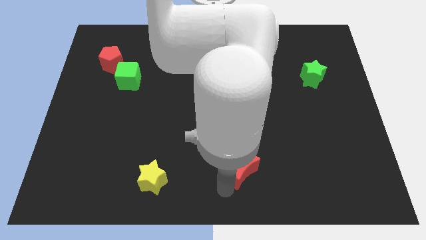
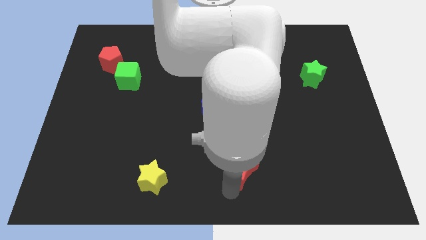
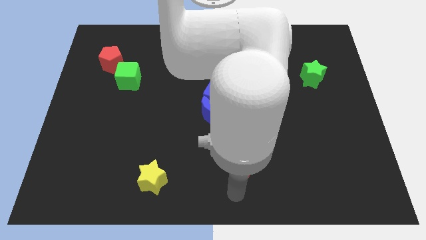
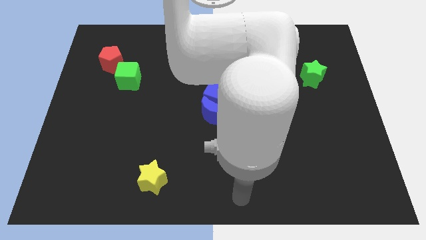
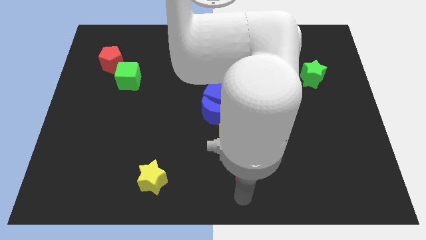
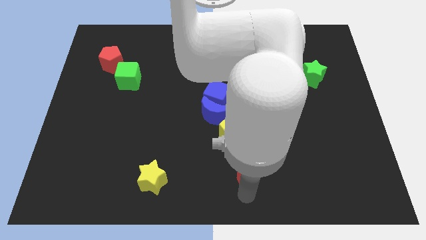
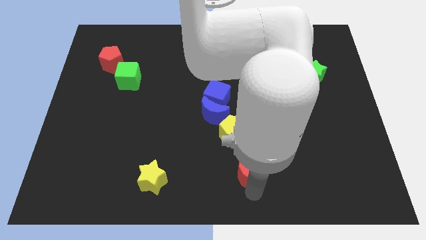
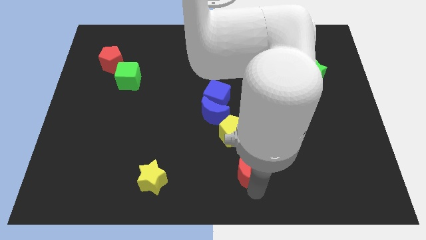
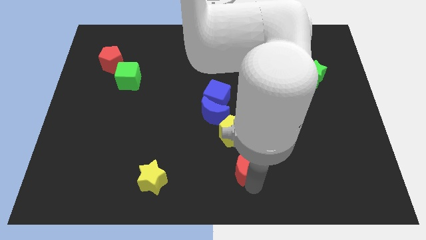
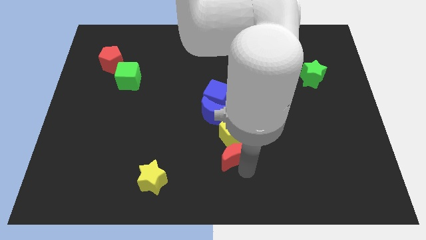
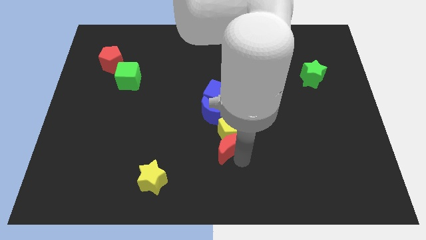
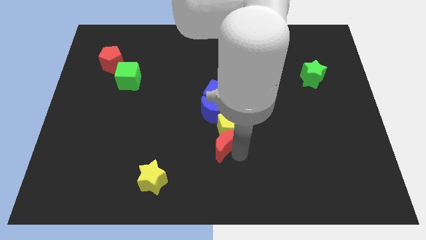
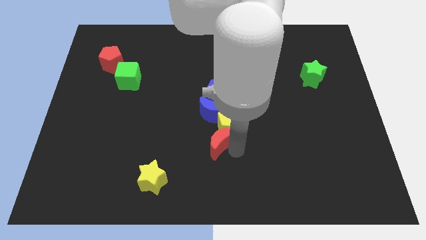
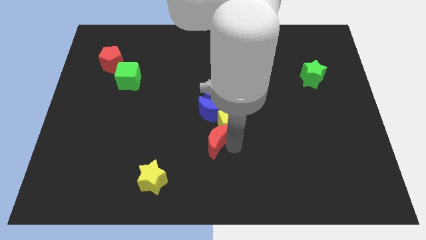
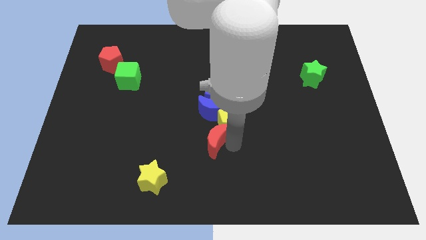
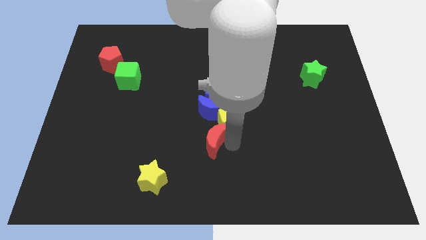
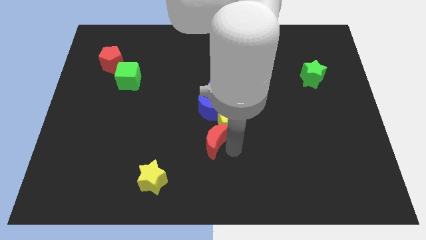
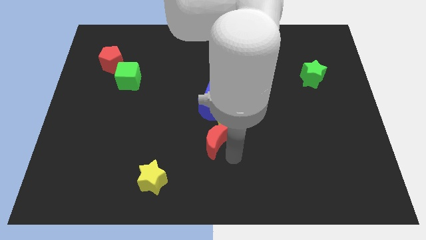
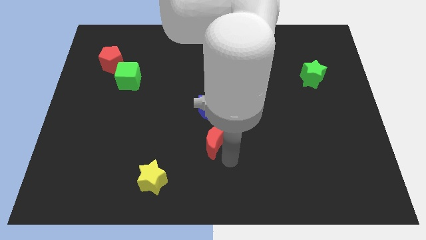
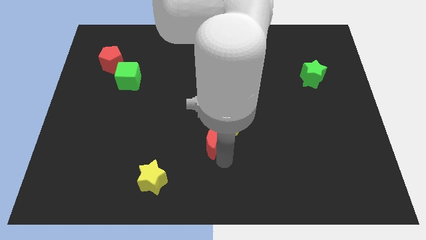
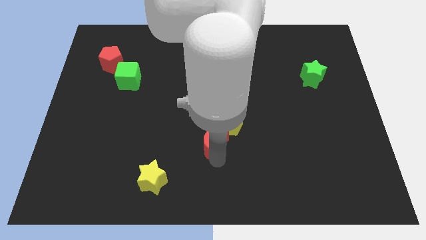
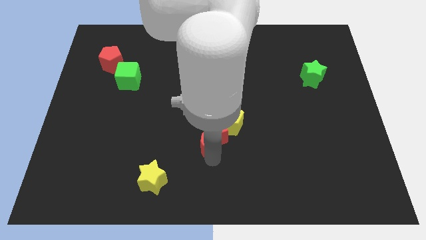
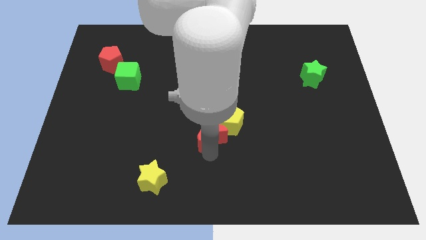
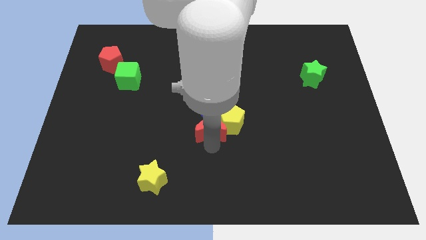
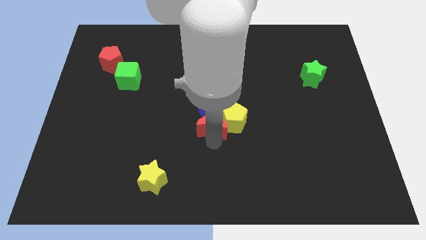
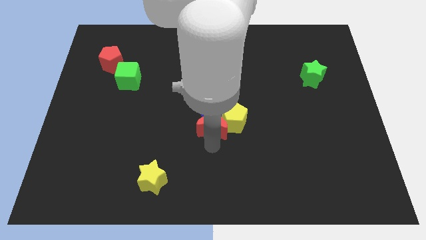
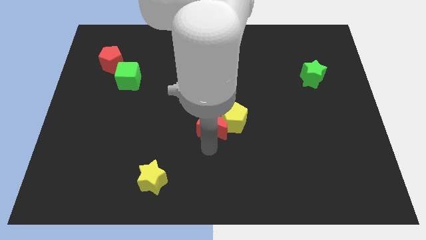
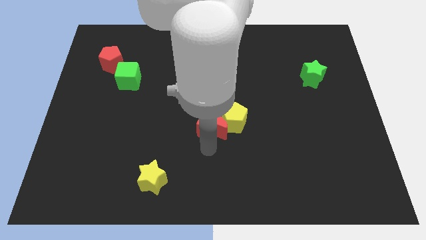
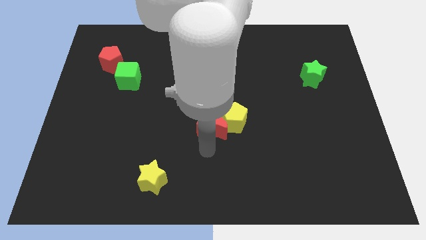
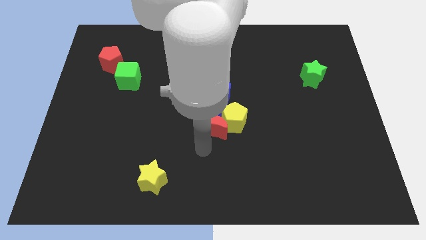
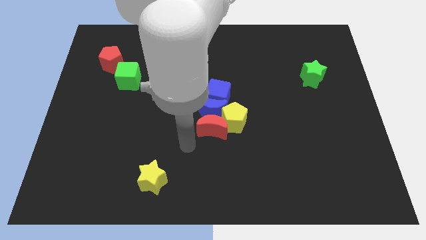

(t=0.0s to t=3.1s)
push the red crescent into the blue moon and yellow pentagon

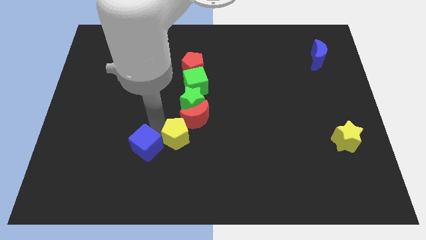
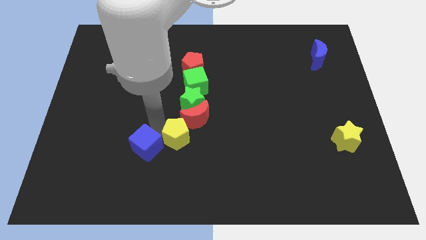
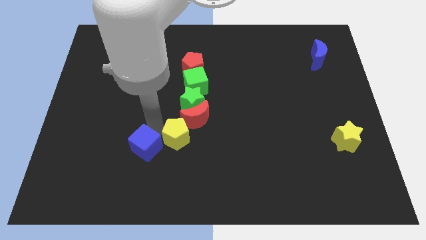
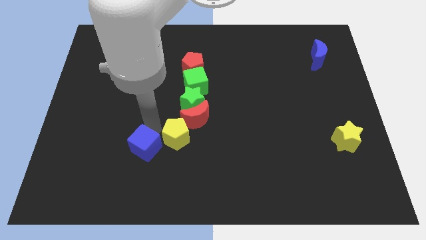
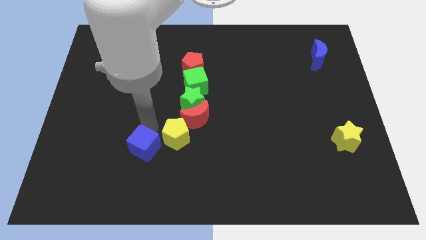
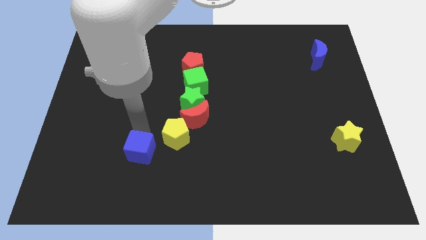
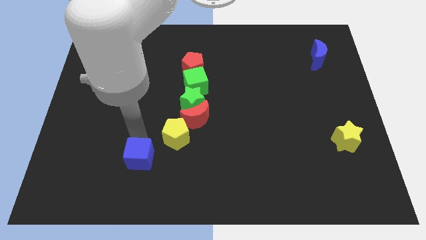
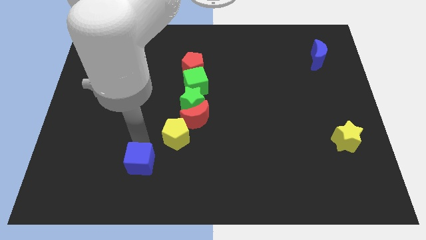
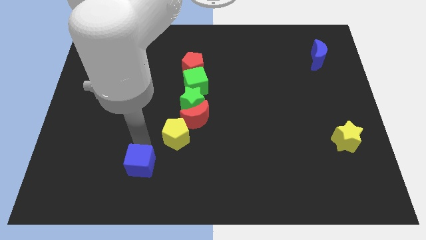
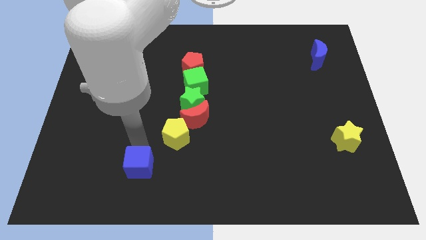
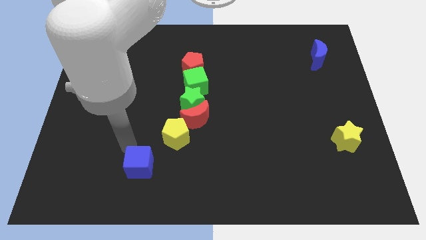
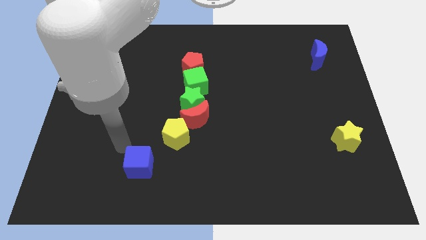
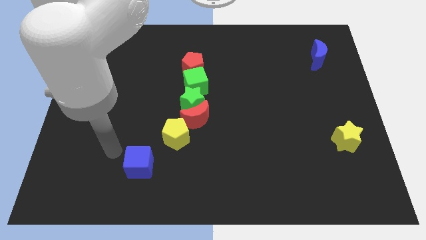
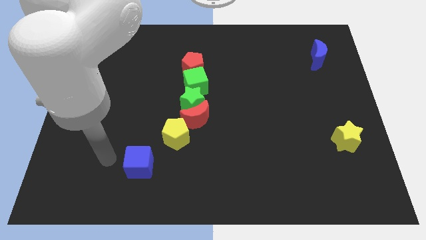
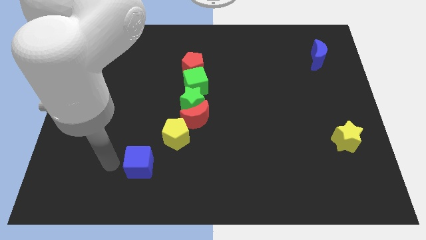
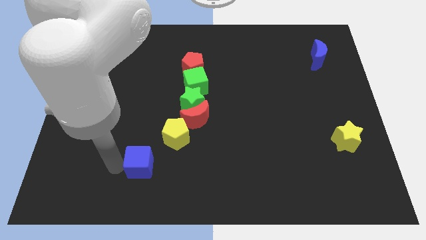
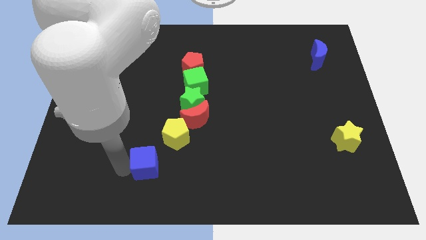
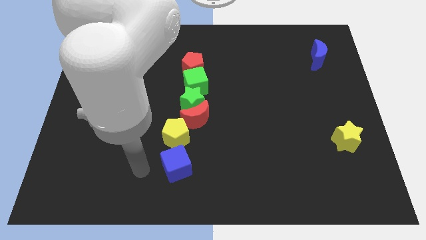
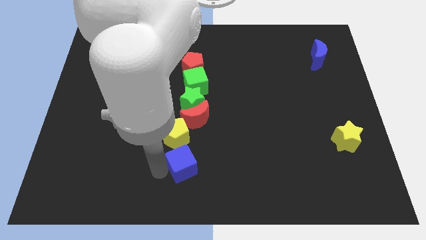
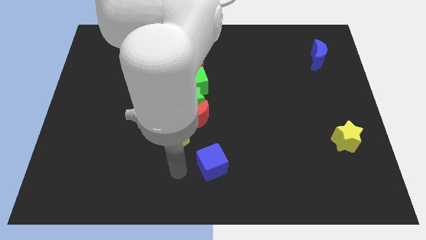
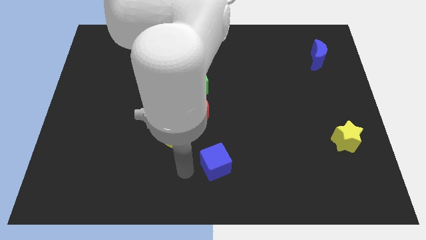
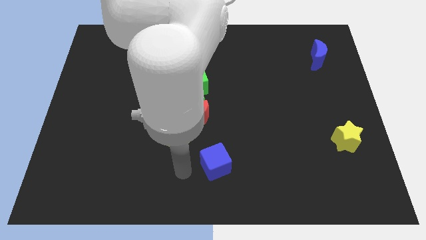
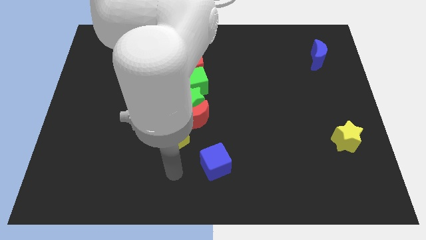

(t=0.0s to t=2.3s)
separate the blue cube from the yellow pentagon

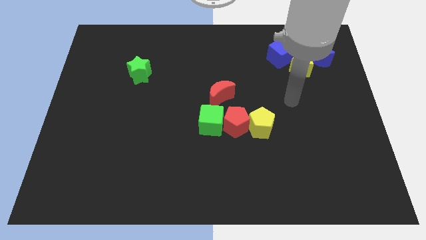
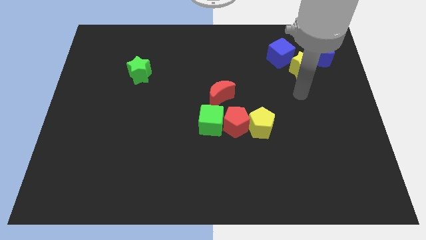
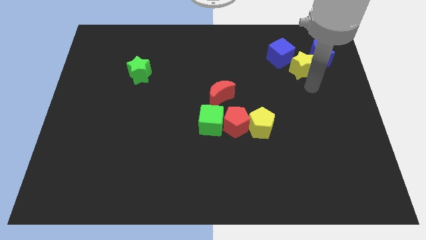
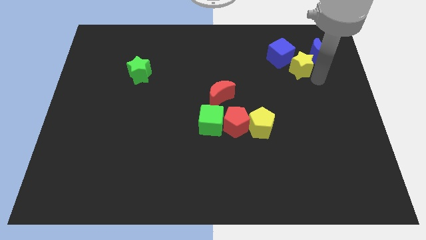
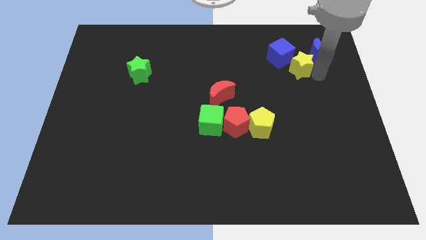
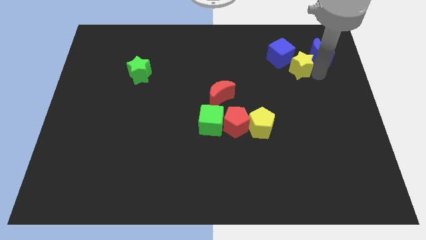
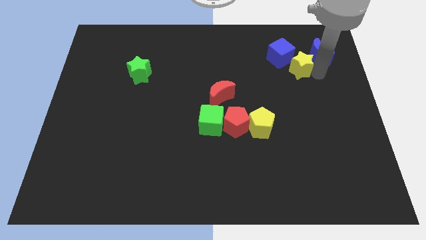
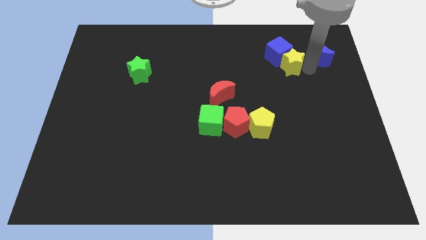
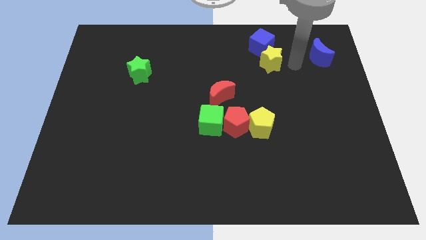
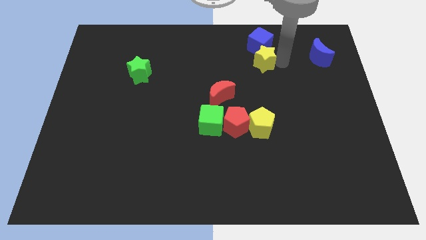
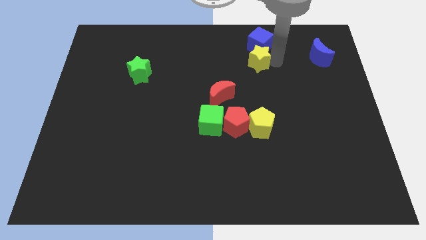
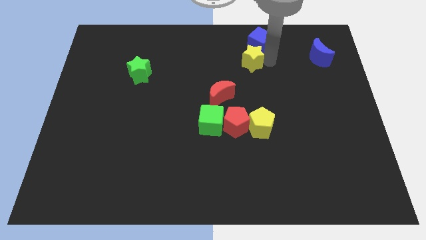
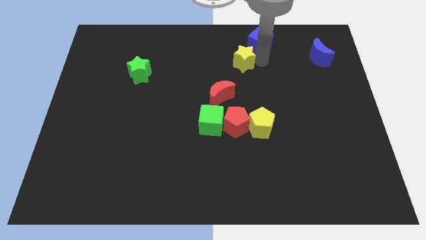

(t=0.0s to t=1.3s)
push the yellow star to the top center

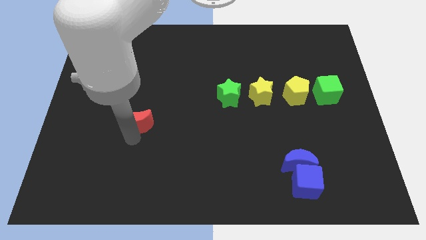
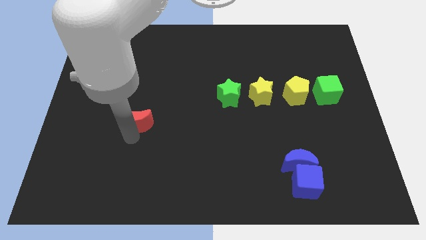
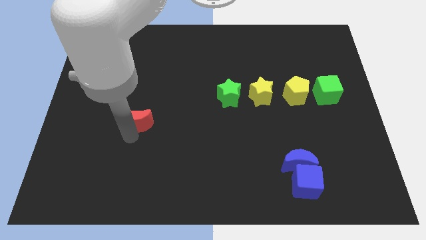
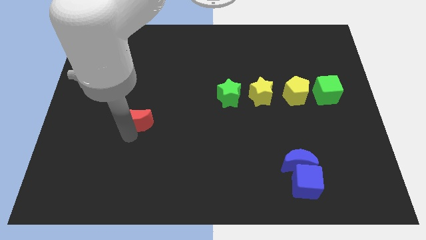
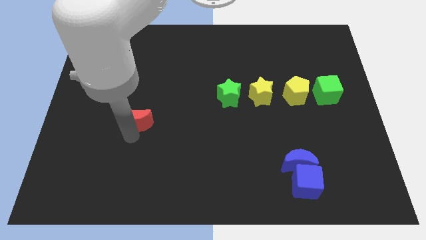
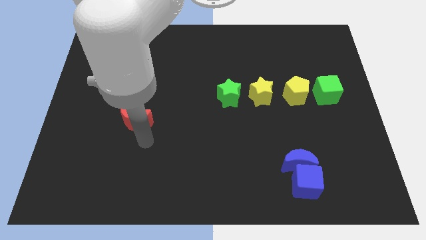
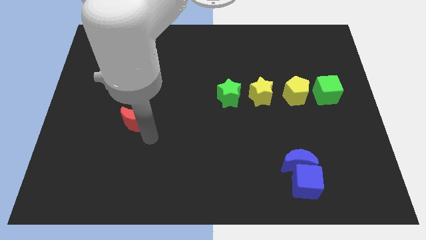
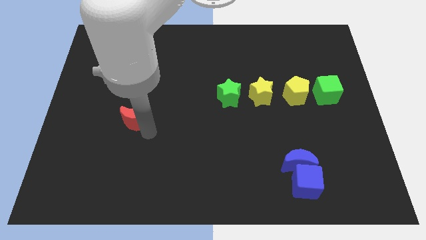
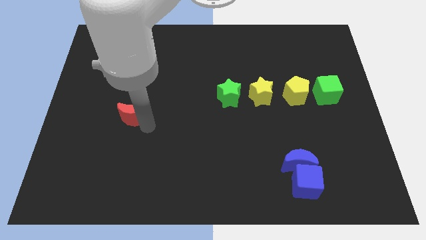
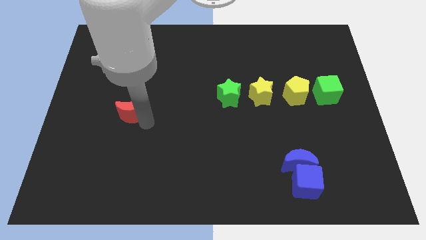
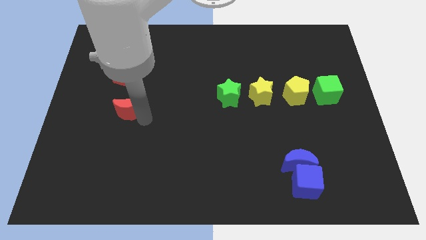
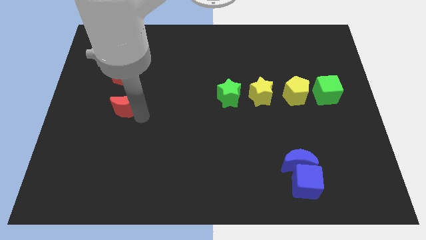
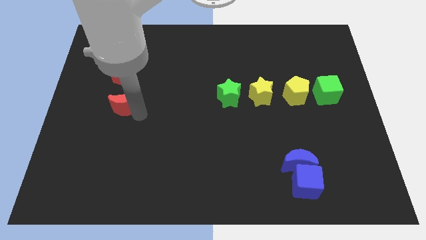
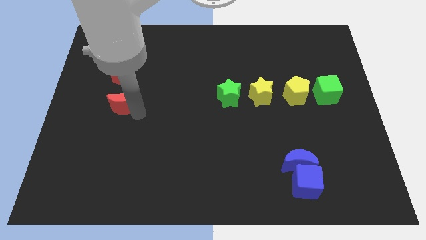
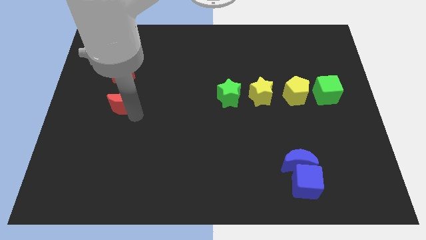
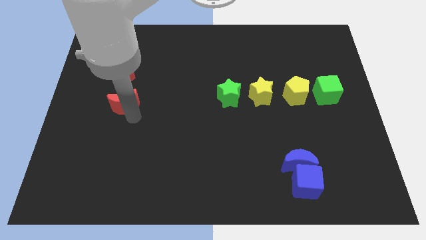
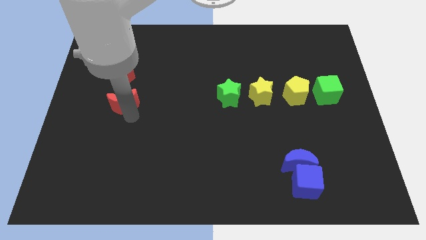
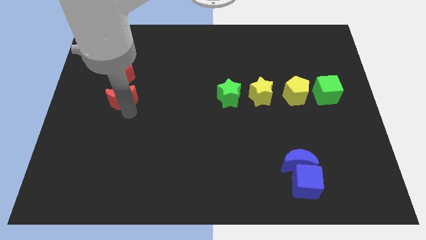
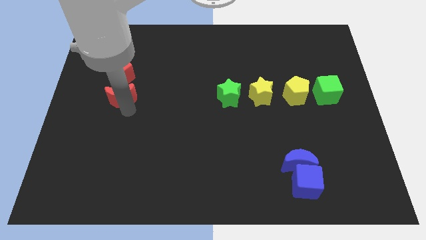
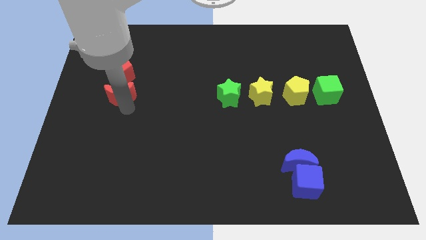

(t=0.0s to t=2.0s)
place the red crescent below the red pentagon

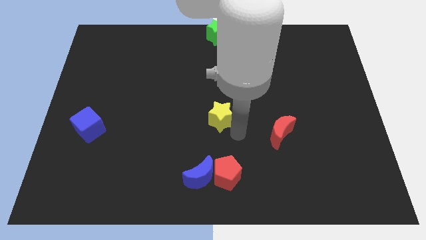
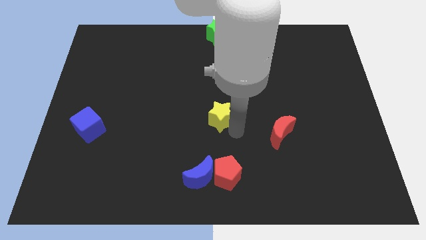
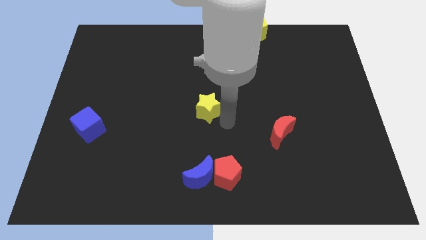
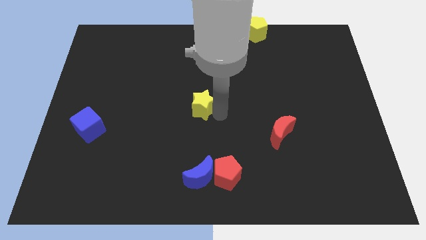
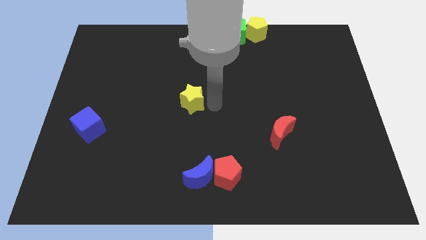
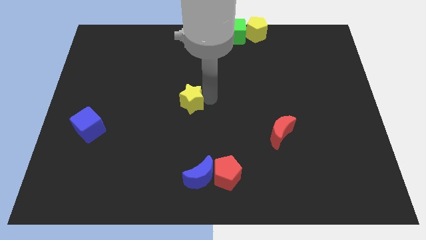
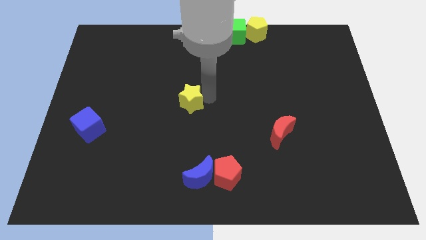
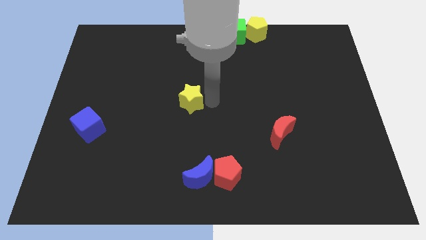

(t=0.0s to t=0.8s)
push the yellow star towards the center of the board
